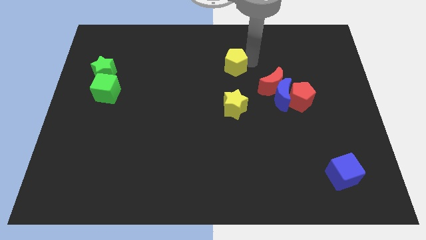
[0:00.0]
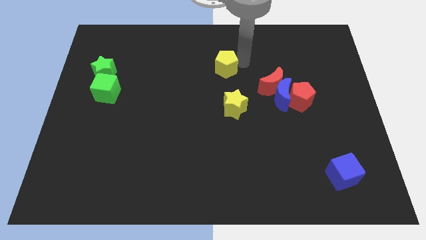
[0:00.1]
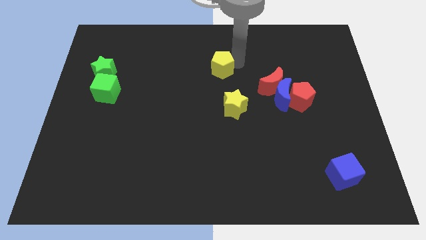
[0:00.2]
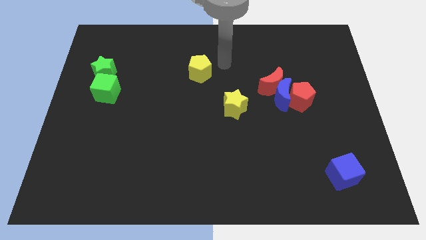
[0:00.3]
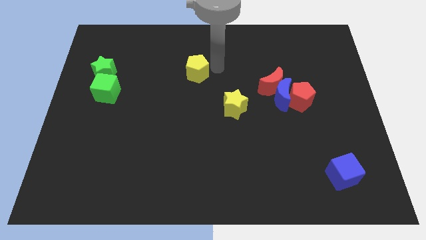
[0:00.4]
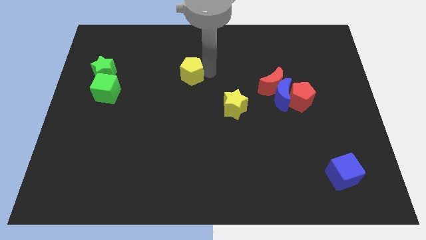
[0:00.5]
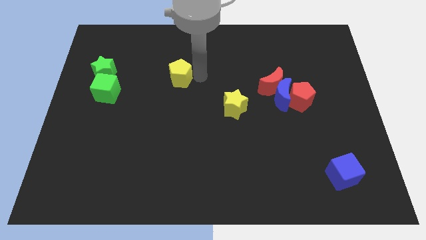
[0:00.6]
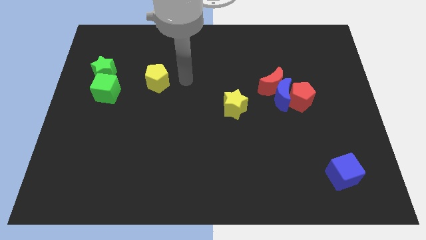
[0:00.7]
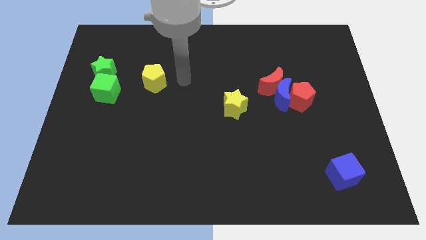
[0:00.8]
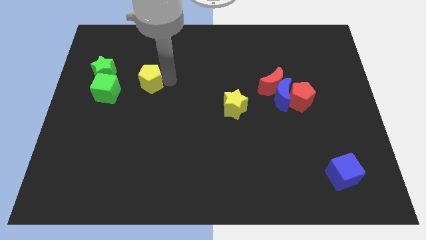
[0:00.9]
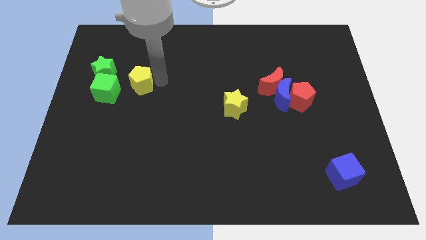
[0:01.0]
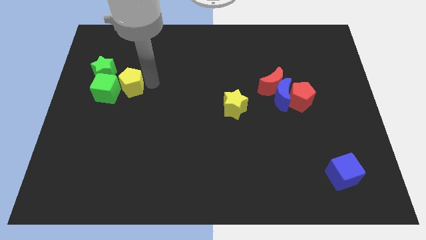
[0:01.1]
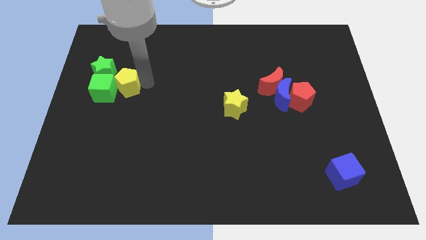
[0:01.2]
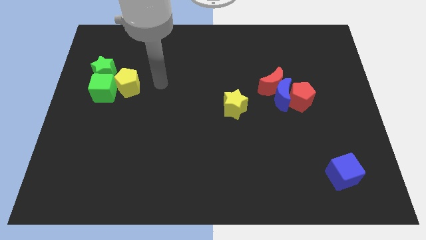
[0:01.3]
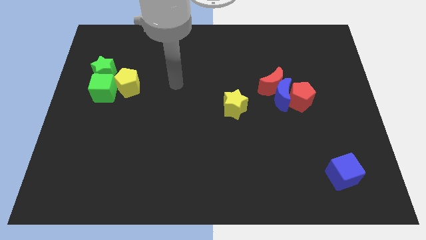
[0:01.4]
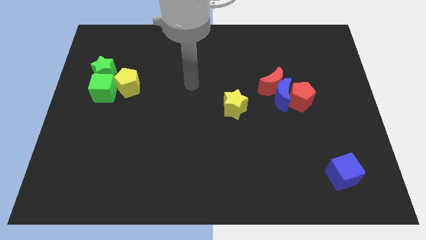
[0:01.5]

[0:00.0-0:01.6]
push the yellow pentagon into the group of green blocks

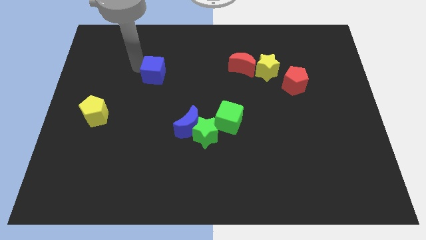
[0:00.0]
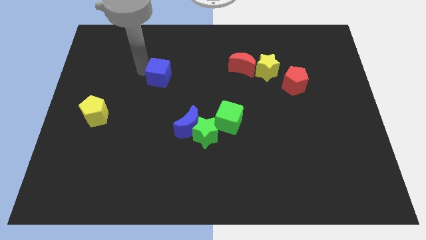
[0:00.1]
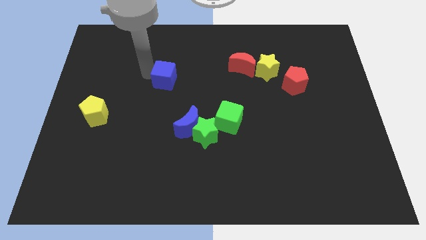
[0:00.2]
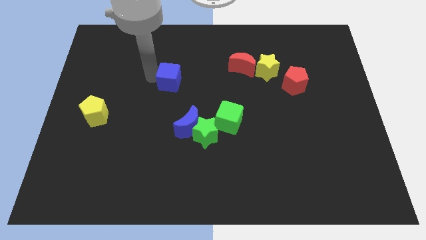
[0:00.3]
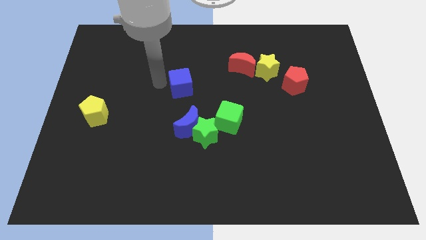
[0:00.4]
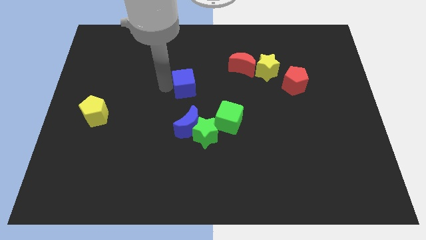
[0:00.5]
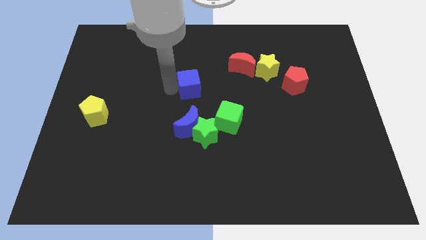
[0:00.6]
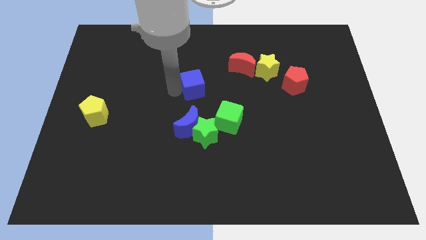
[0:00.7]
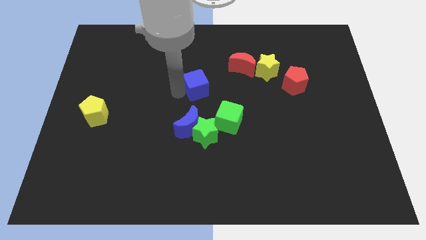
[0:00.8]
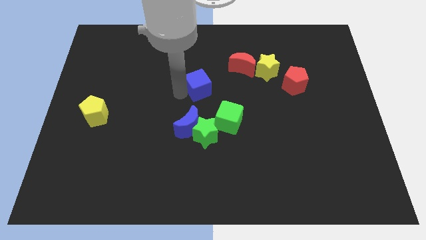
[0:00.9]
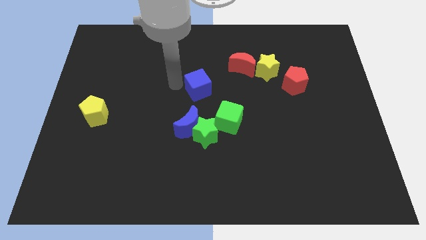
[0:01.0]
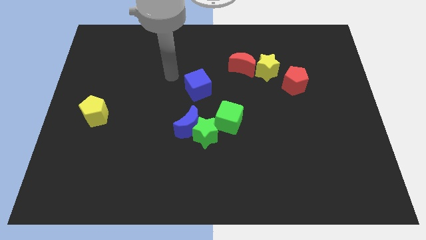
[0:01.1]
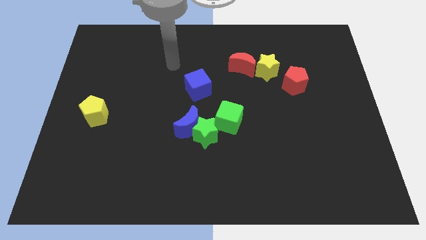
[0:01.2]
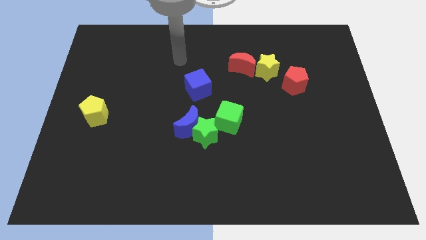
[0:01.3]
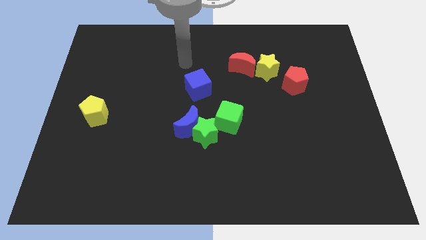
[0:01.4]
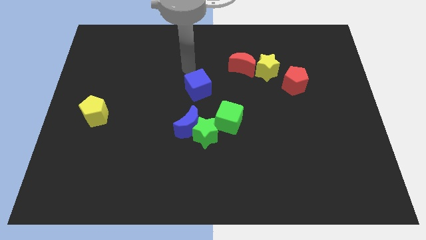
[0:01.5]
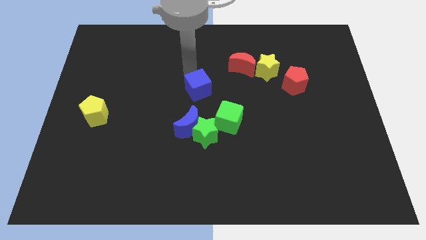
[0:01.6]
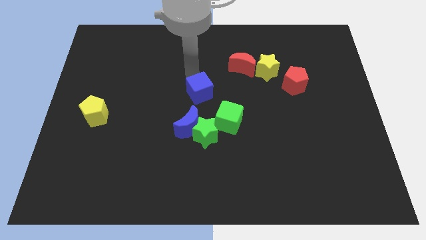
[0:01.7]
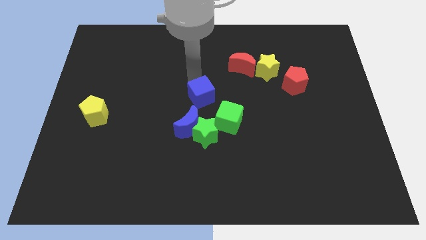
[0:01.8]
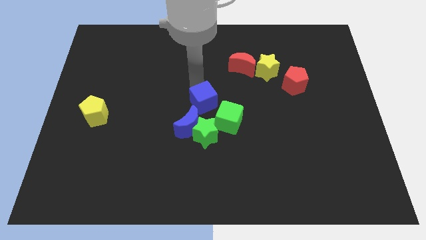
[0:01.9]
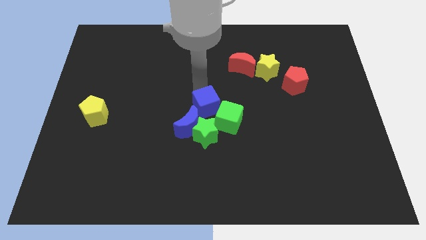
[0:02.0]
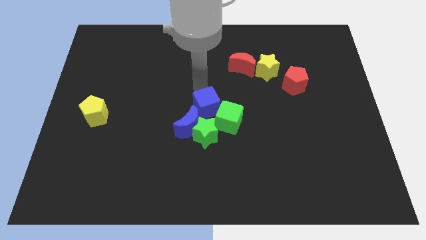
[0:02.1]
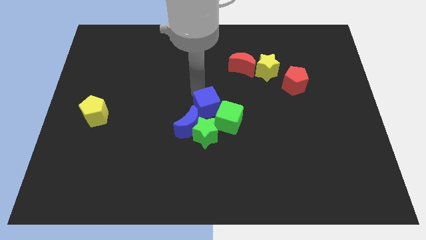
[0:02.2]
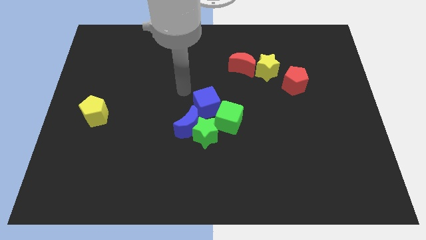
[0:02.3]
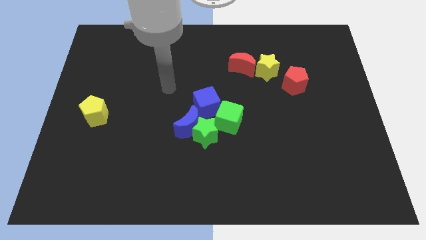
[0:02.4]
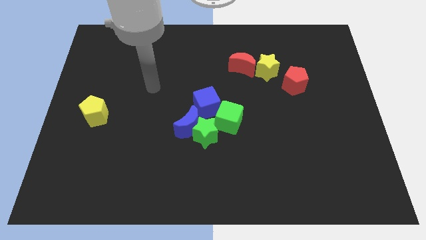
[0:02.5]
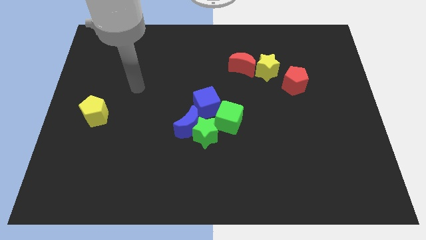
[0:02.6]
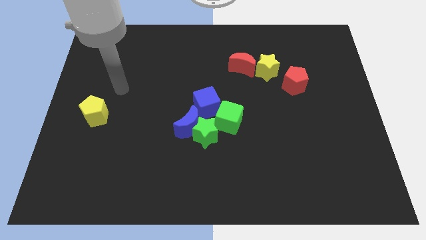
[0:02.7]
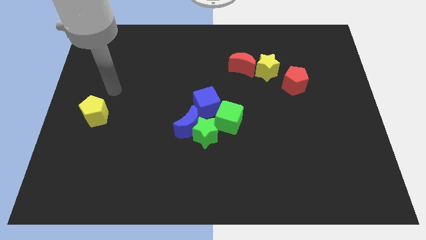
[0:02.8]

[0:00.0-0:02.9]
drag the blue cube close to the group of blocks

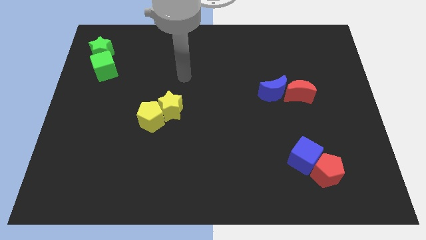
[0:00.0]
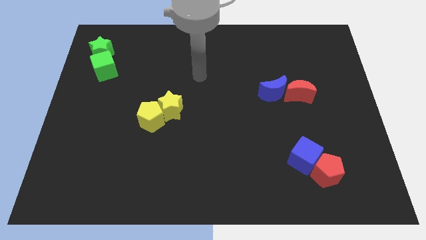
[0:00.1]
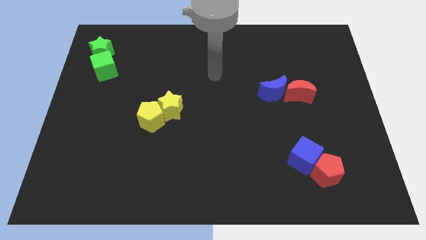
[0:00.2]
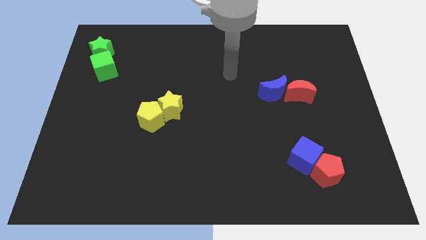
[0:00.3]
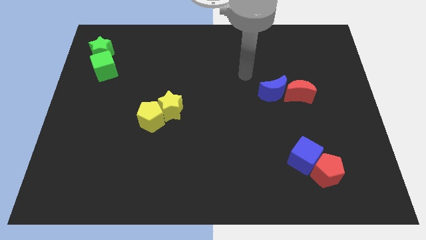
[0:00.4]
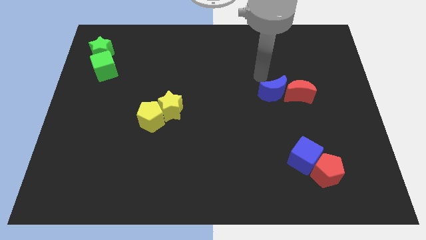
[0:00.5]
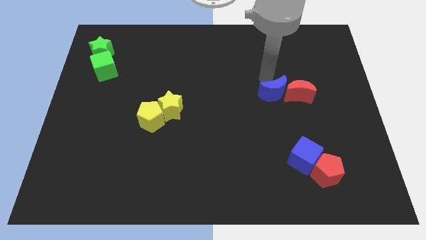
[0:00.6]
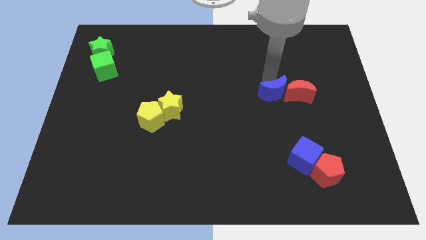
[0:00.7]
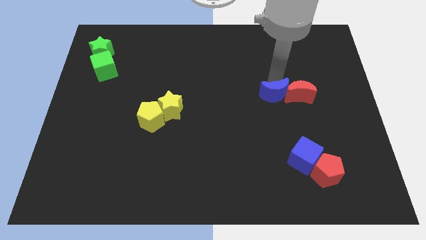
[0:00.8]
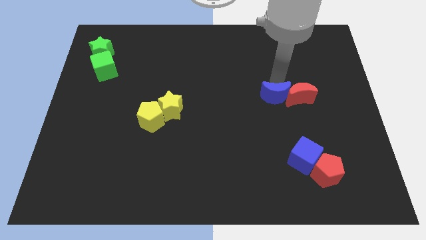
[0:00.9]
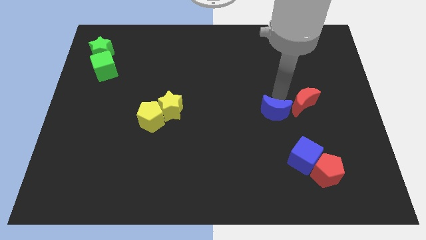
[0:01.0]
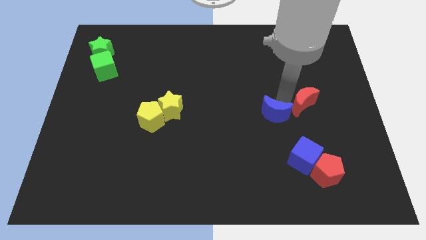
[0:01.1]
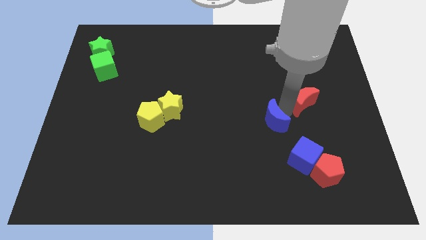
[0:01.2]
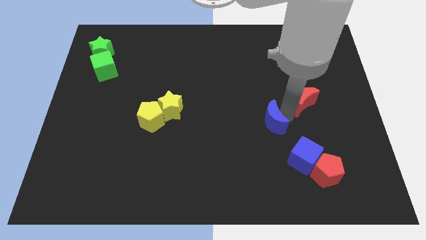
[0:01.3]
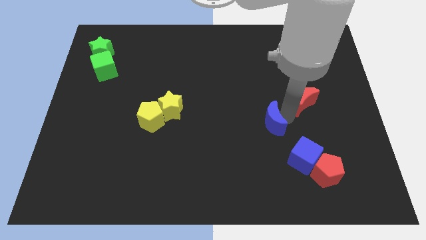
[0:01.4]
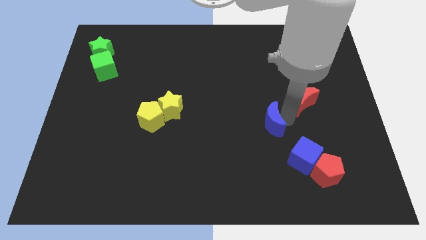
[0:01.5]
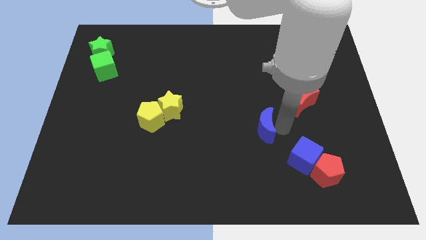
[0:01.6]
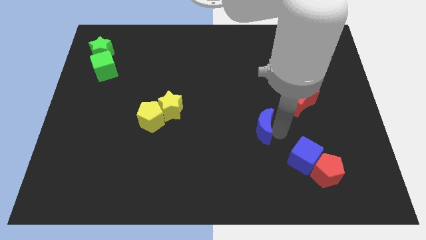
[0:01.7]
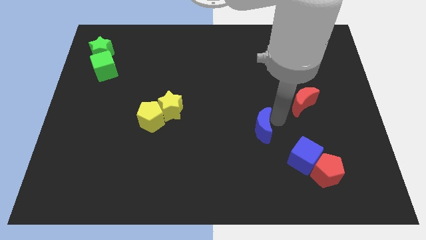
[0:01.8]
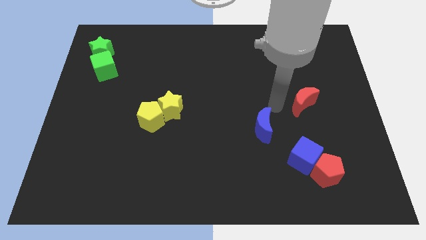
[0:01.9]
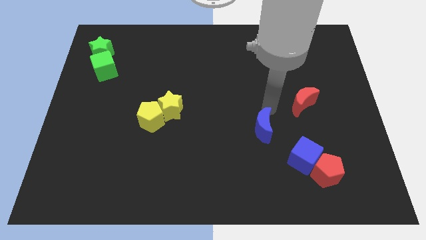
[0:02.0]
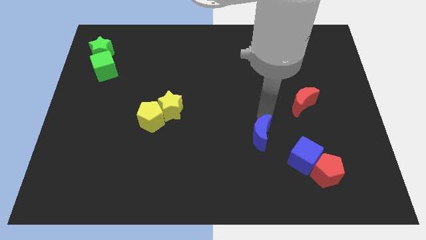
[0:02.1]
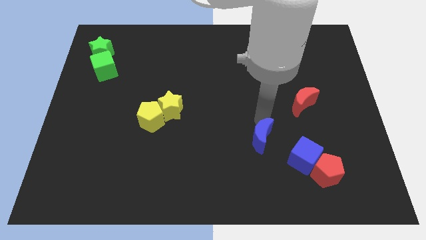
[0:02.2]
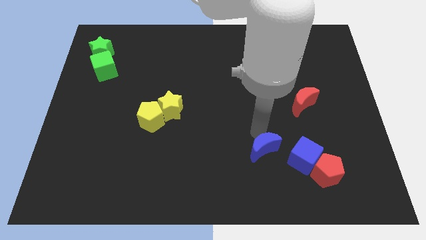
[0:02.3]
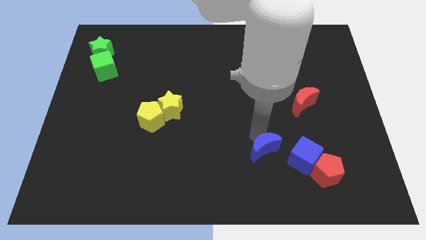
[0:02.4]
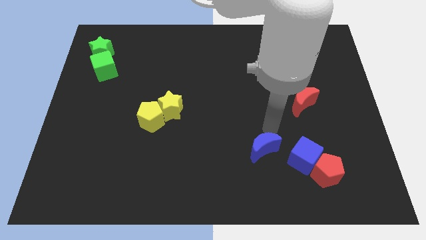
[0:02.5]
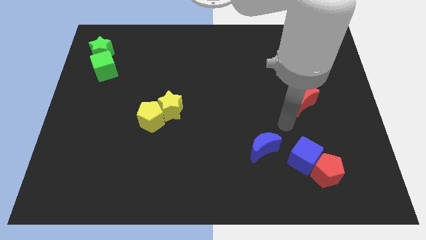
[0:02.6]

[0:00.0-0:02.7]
move blue moon to the blue cube

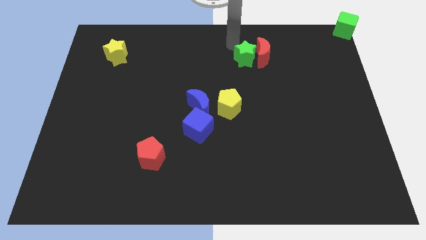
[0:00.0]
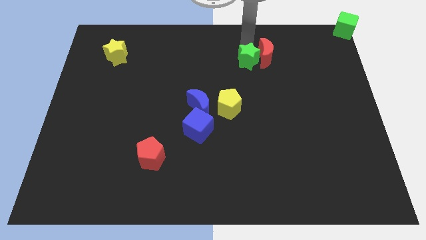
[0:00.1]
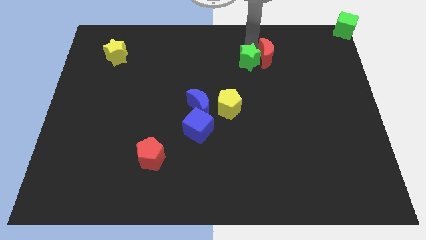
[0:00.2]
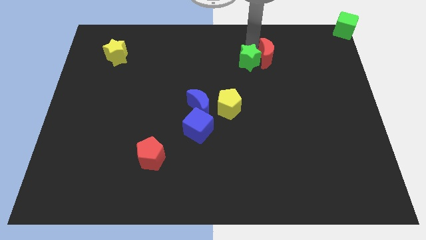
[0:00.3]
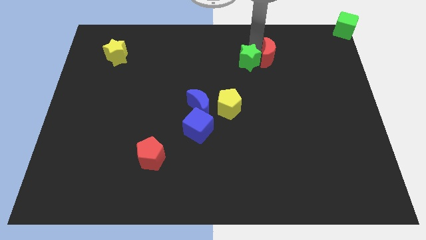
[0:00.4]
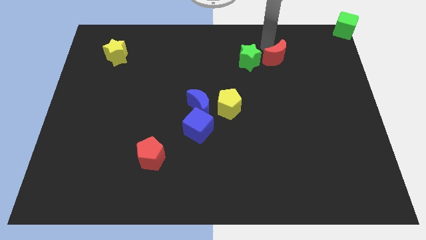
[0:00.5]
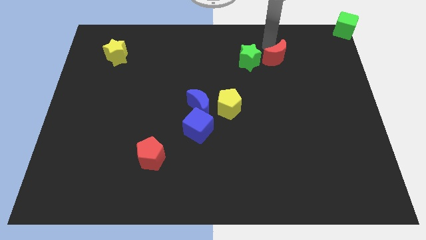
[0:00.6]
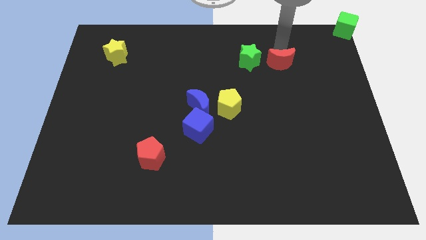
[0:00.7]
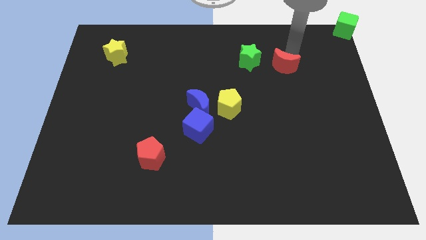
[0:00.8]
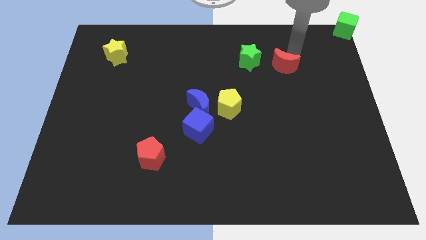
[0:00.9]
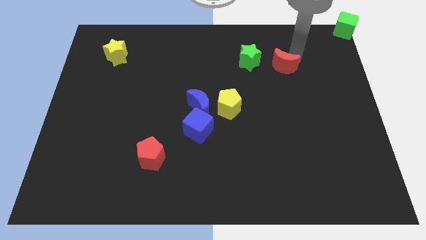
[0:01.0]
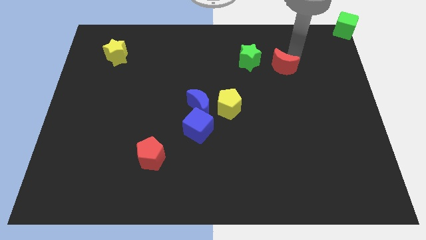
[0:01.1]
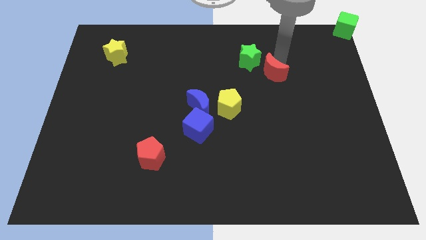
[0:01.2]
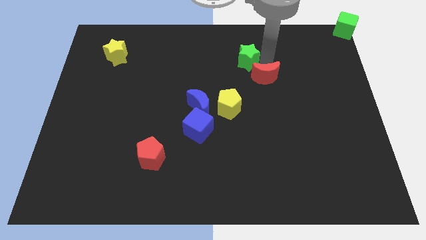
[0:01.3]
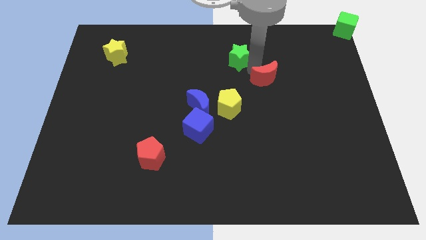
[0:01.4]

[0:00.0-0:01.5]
place the red crescent below the green star

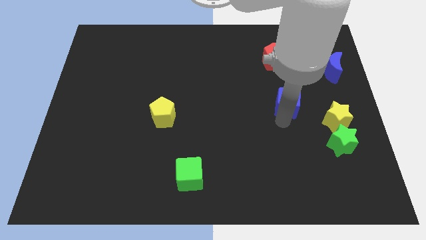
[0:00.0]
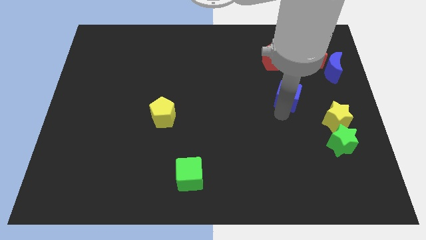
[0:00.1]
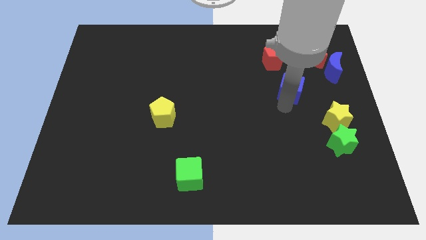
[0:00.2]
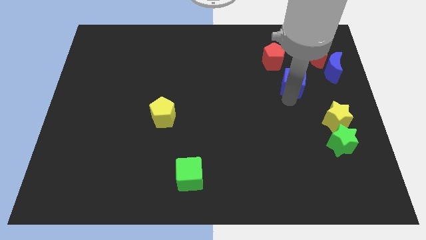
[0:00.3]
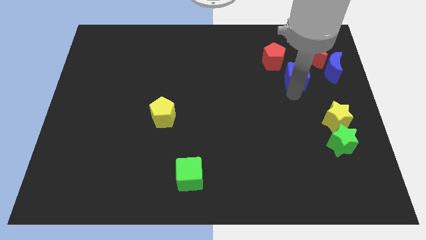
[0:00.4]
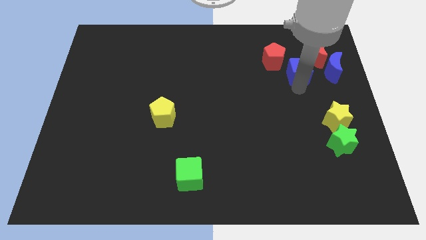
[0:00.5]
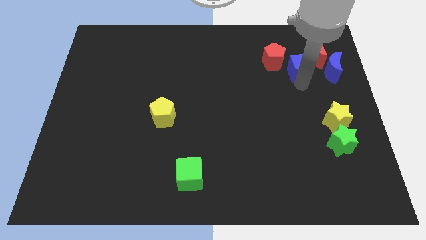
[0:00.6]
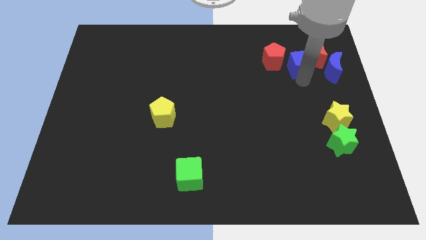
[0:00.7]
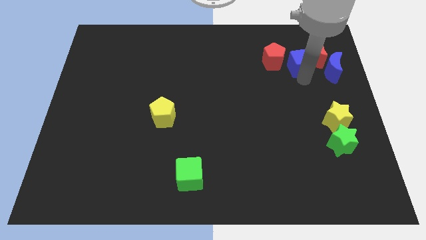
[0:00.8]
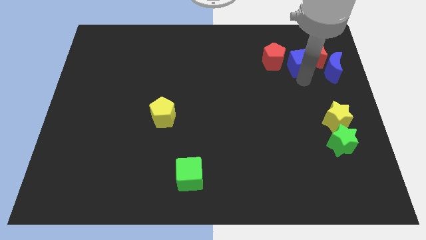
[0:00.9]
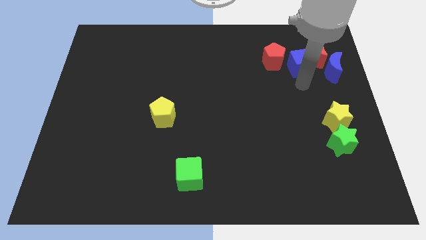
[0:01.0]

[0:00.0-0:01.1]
move blue cube towards in between of red pentagon red moon
